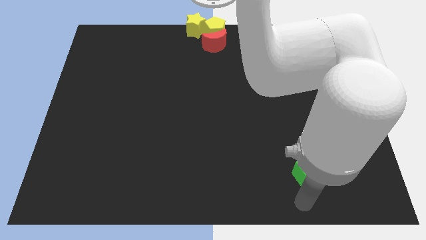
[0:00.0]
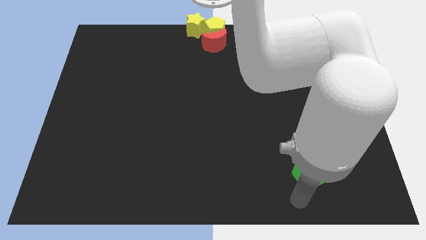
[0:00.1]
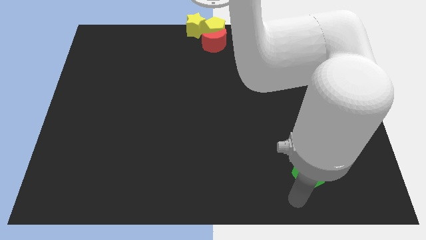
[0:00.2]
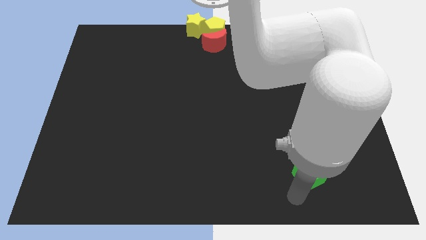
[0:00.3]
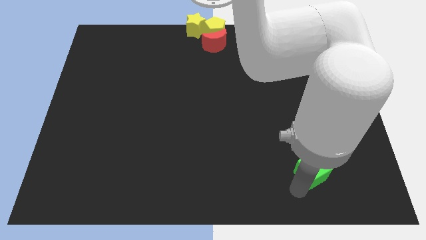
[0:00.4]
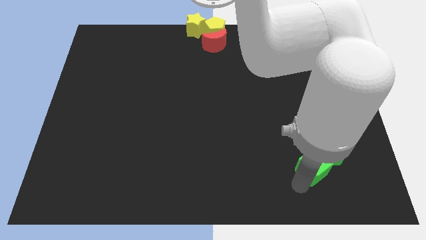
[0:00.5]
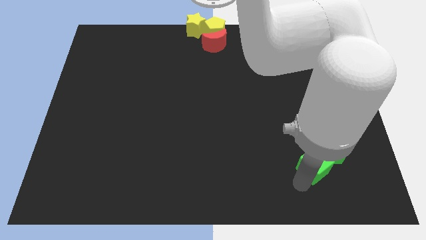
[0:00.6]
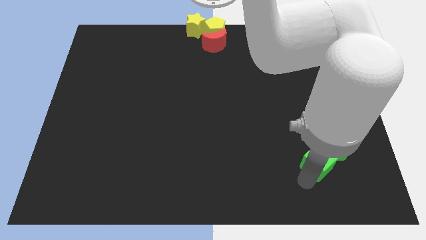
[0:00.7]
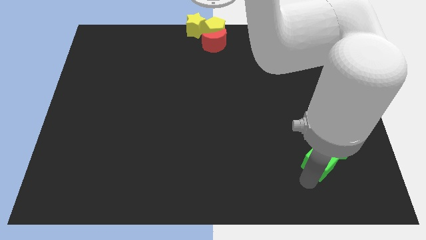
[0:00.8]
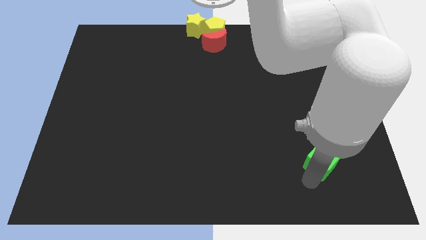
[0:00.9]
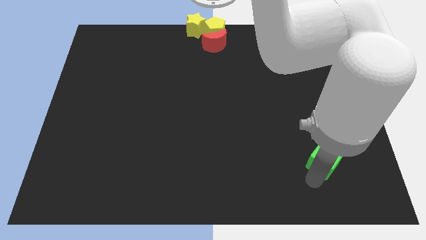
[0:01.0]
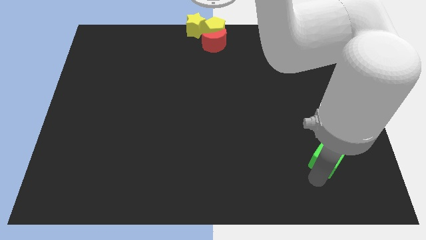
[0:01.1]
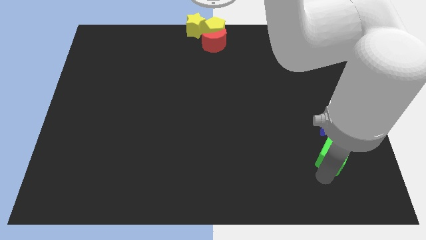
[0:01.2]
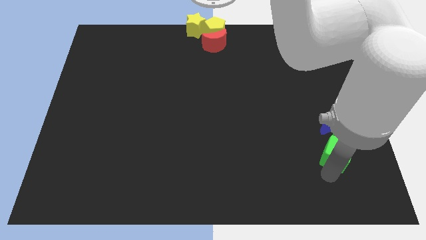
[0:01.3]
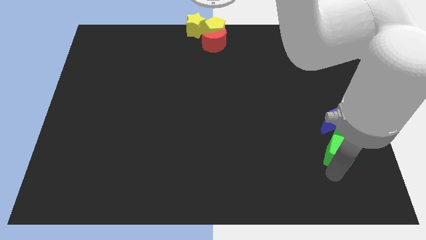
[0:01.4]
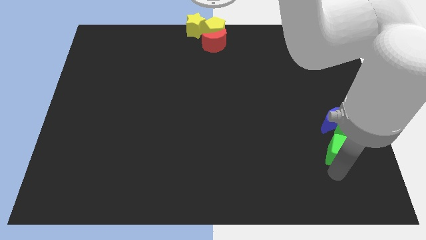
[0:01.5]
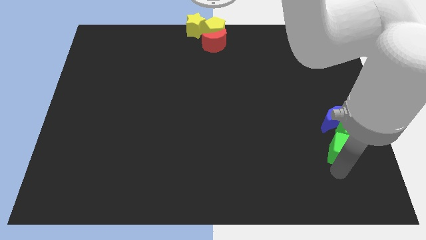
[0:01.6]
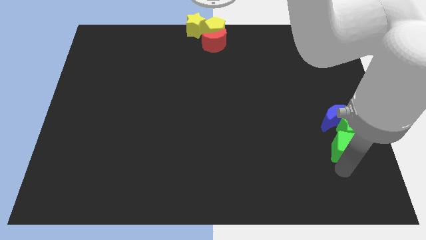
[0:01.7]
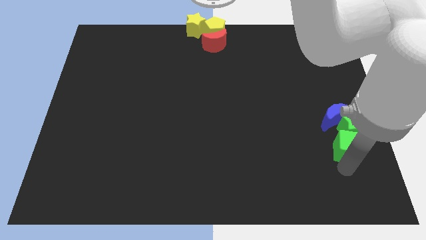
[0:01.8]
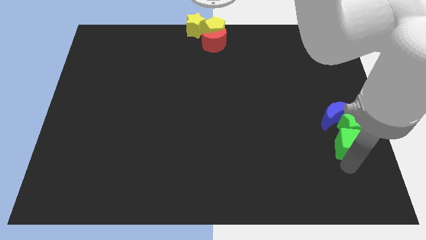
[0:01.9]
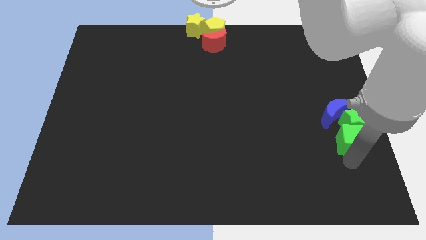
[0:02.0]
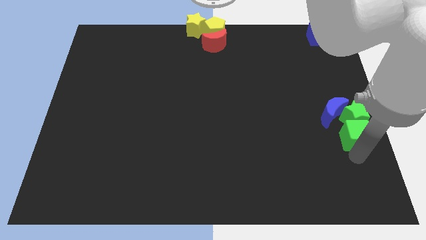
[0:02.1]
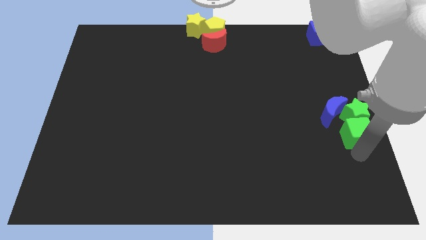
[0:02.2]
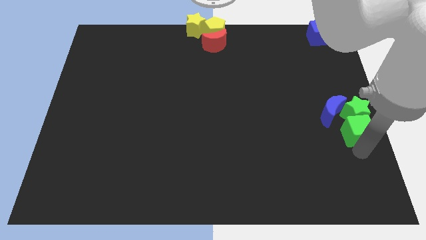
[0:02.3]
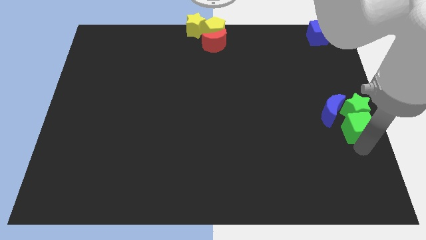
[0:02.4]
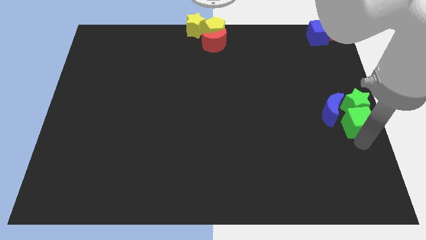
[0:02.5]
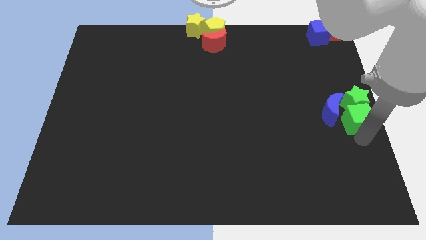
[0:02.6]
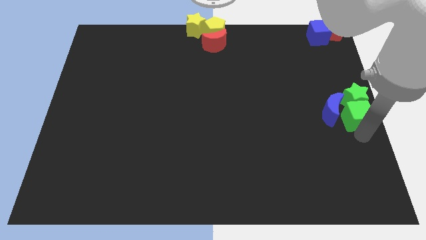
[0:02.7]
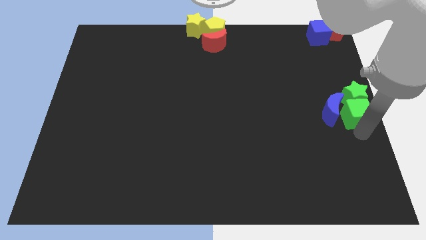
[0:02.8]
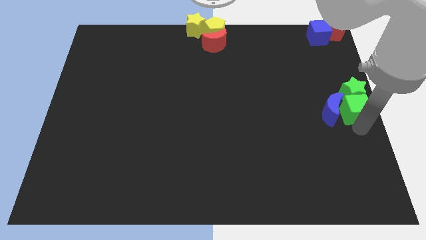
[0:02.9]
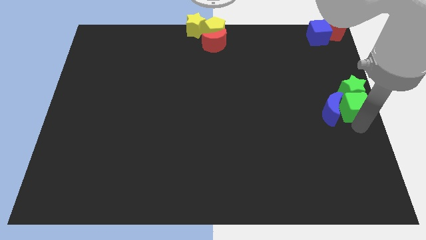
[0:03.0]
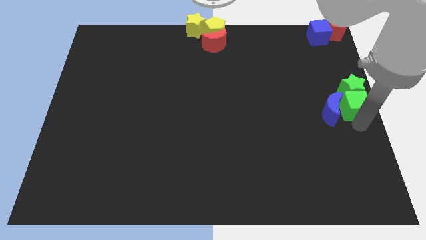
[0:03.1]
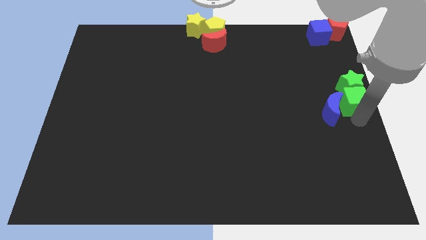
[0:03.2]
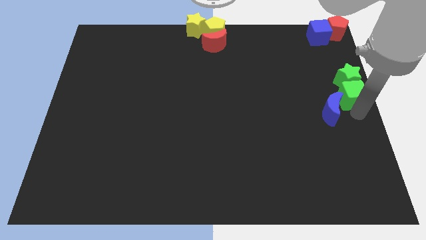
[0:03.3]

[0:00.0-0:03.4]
push the green cube along with green star towards the right center of the board

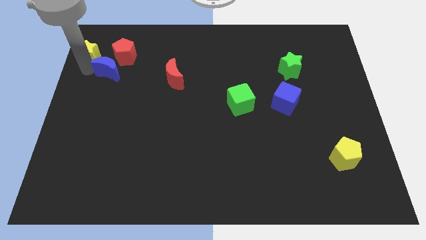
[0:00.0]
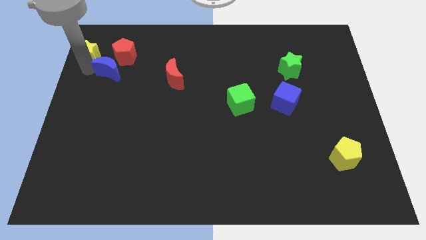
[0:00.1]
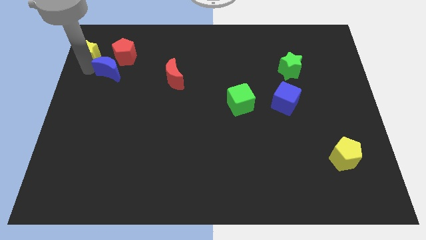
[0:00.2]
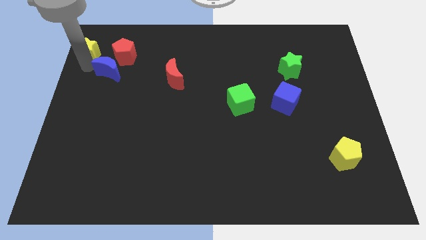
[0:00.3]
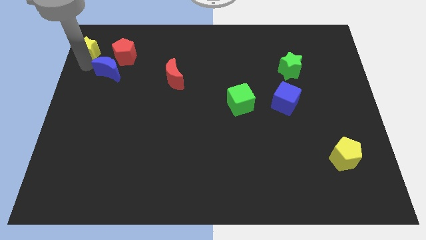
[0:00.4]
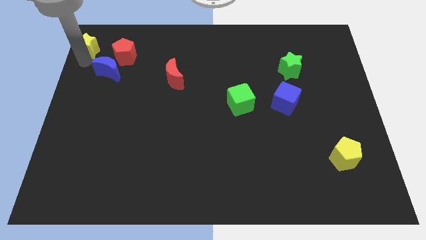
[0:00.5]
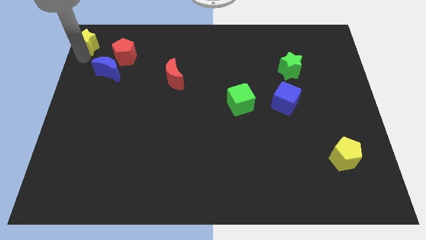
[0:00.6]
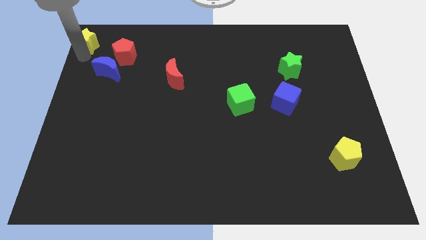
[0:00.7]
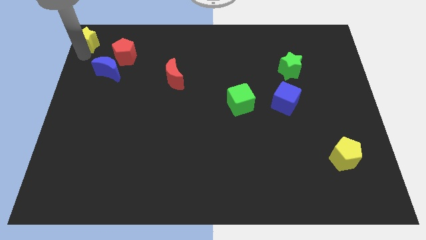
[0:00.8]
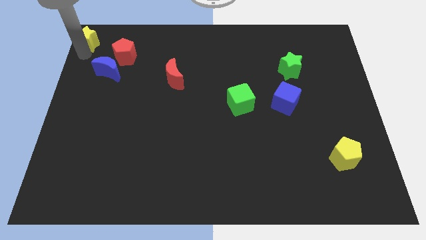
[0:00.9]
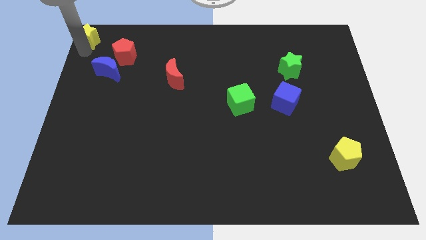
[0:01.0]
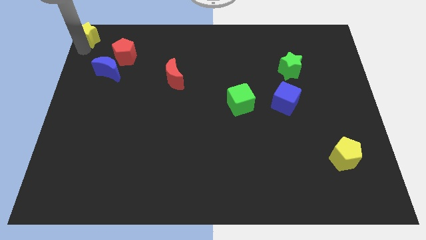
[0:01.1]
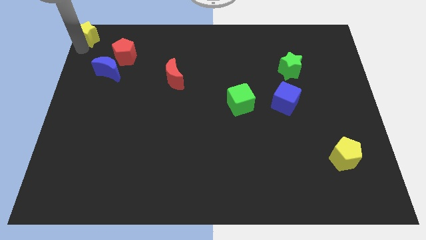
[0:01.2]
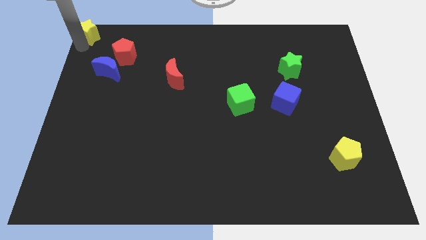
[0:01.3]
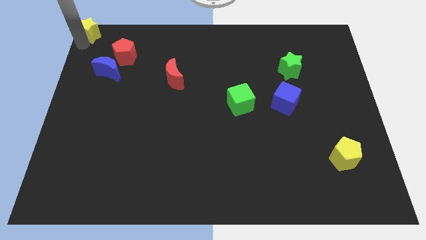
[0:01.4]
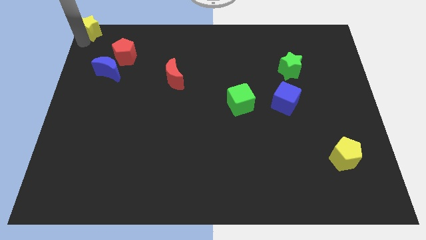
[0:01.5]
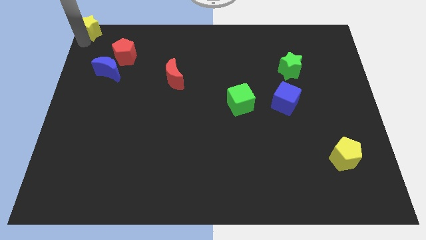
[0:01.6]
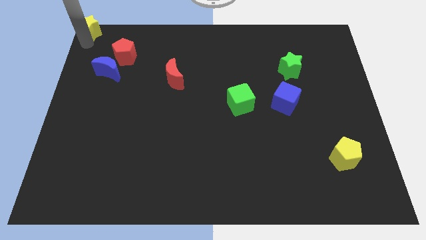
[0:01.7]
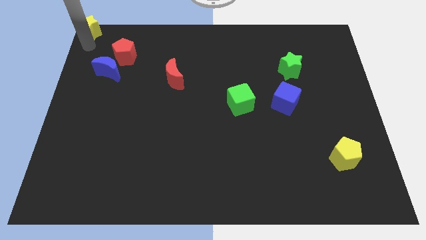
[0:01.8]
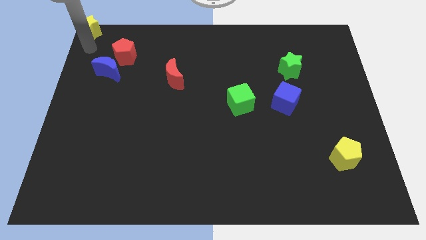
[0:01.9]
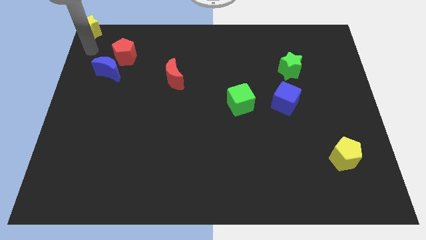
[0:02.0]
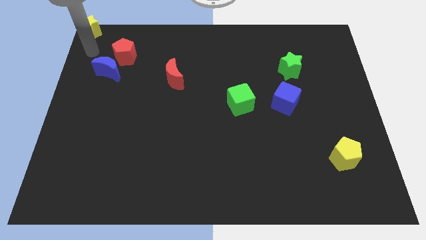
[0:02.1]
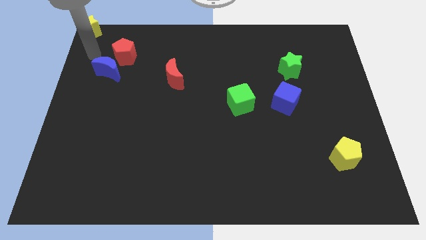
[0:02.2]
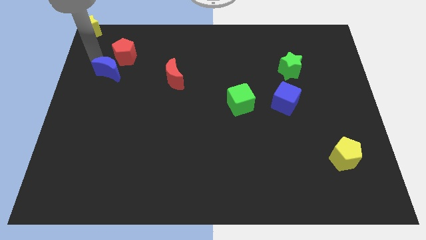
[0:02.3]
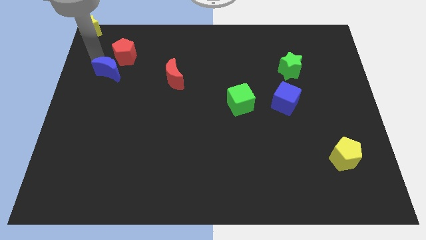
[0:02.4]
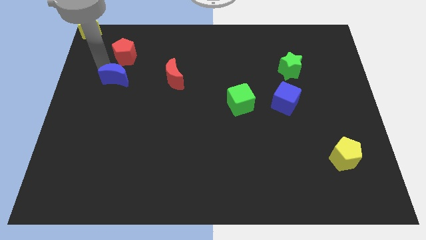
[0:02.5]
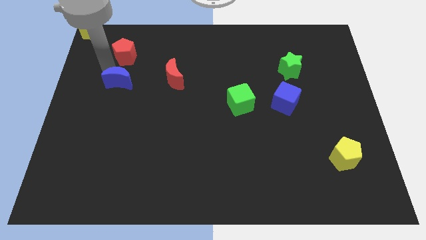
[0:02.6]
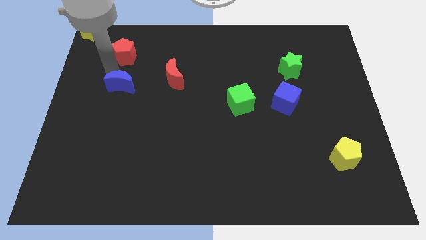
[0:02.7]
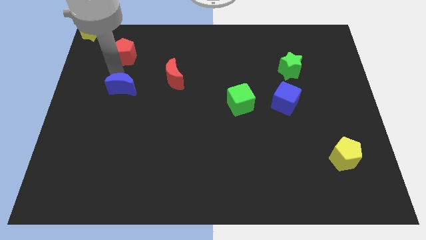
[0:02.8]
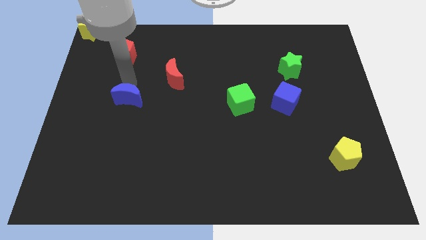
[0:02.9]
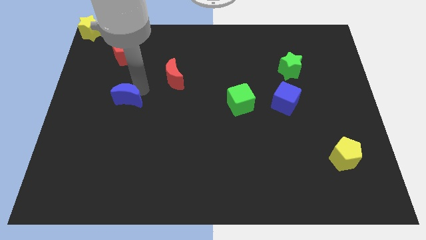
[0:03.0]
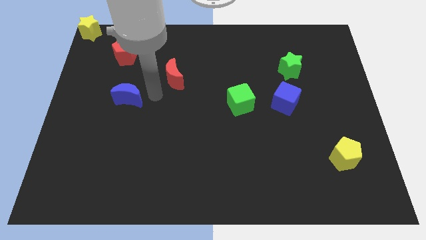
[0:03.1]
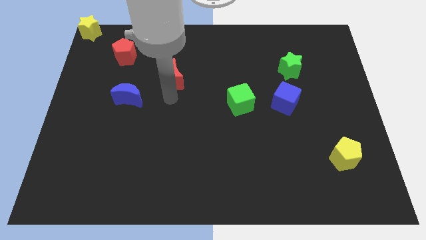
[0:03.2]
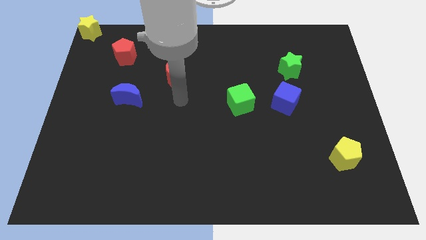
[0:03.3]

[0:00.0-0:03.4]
push blue crescent below red pentagon

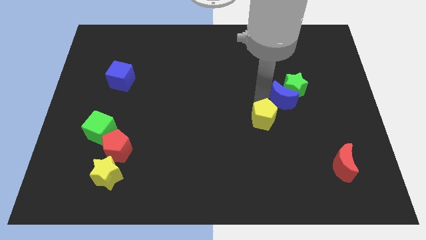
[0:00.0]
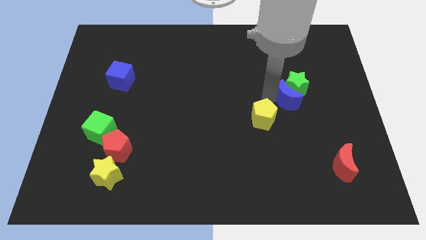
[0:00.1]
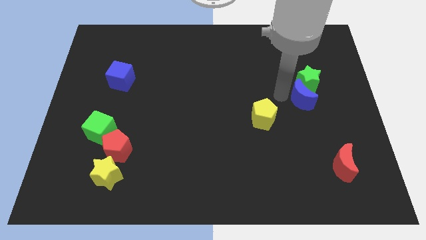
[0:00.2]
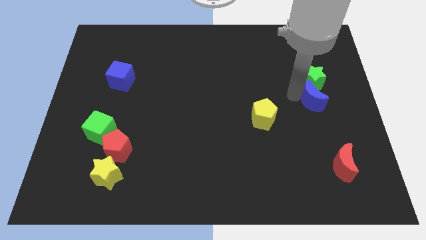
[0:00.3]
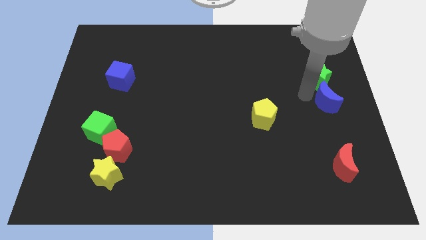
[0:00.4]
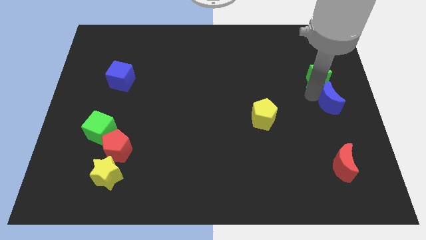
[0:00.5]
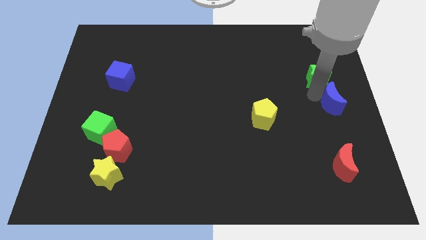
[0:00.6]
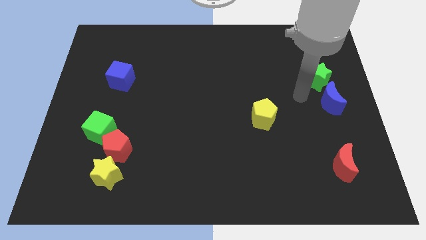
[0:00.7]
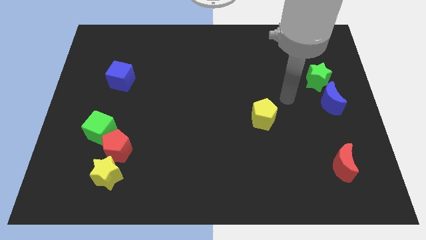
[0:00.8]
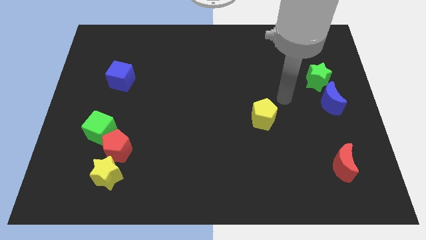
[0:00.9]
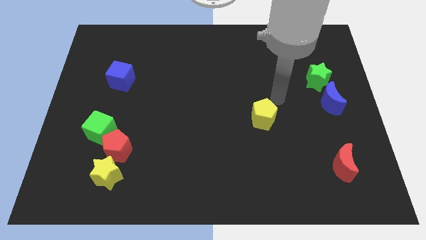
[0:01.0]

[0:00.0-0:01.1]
separate the green star and blue moon from yellow pentagon

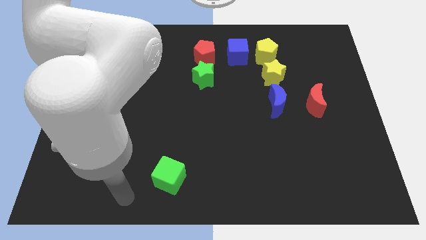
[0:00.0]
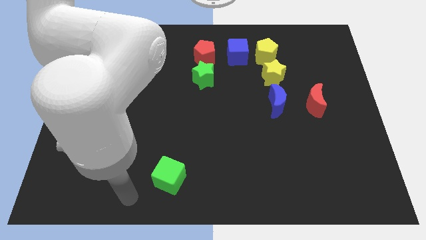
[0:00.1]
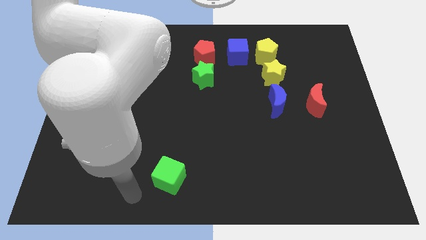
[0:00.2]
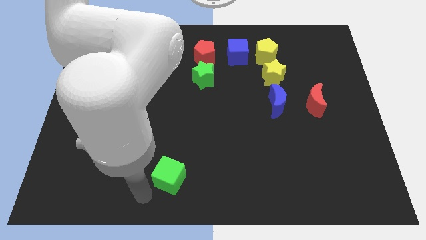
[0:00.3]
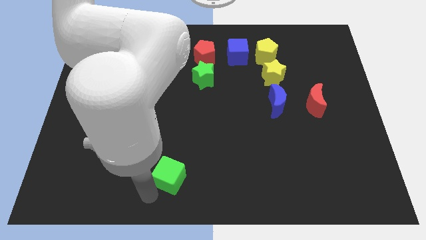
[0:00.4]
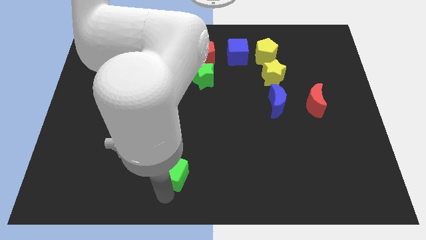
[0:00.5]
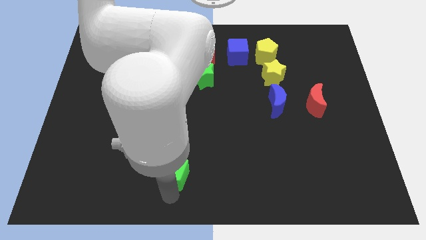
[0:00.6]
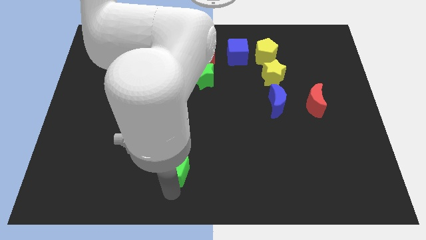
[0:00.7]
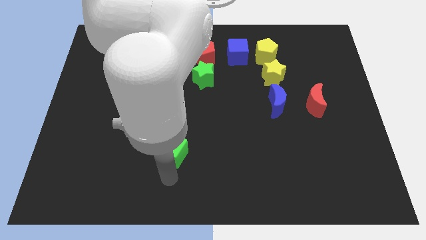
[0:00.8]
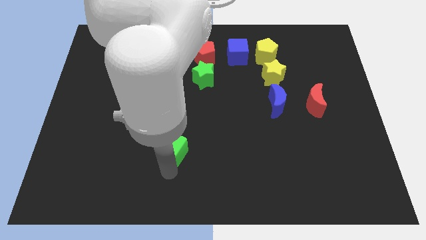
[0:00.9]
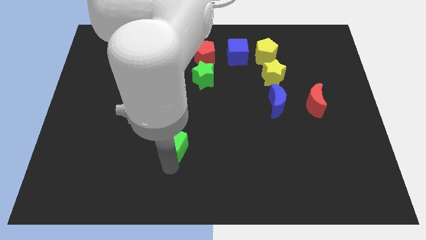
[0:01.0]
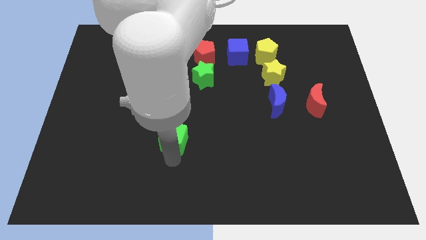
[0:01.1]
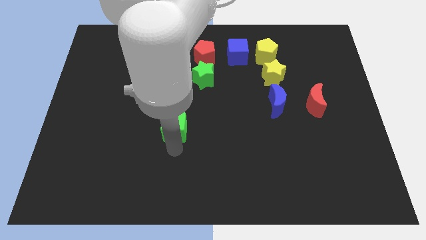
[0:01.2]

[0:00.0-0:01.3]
move the green cube slightly upwards
